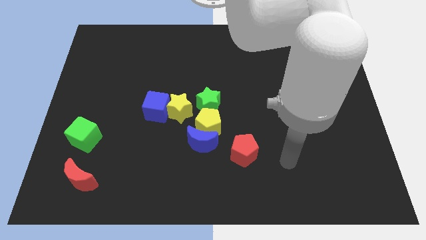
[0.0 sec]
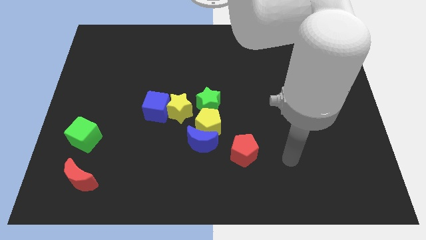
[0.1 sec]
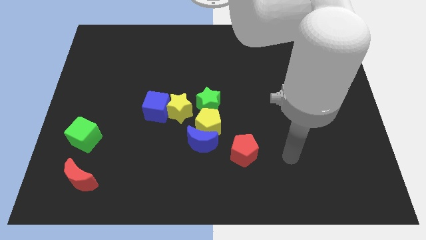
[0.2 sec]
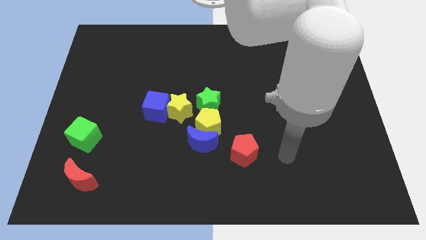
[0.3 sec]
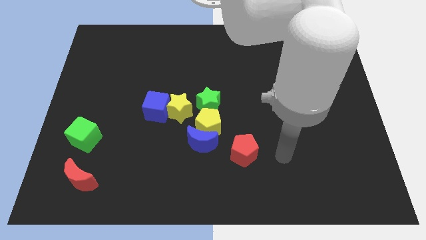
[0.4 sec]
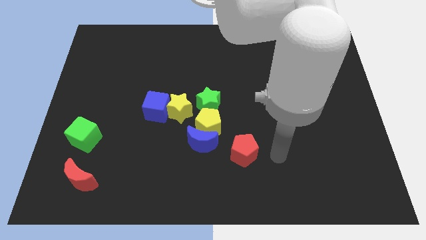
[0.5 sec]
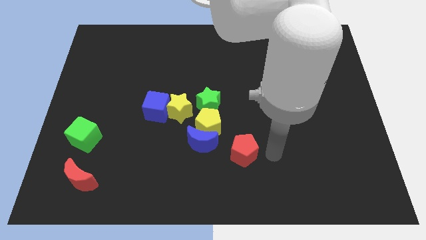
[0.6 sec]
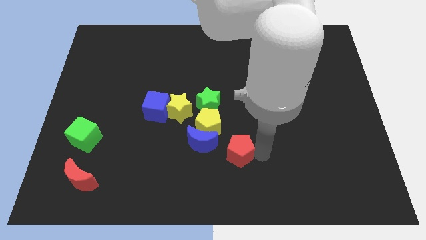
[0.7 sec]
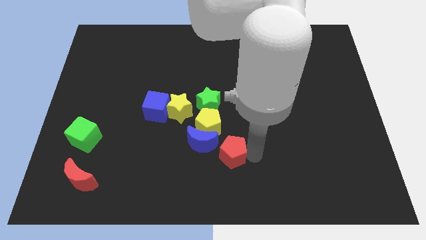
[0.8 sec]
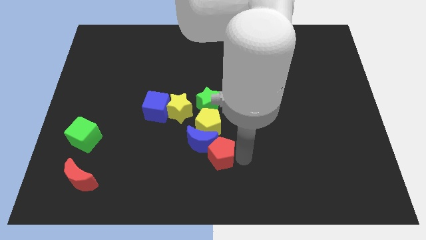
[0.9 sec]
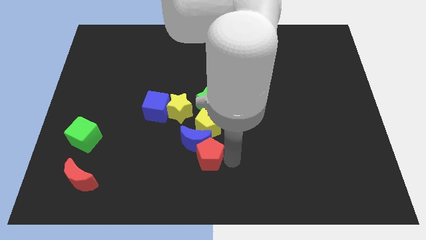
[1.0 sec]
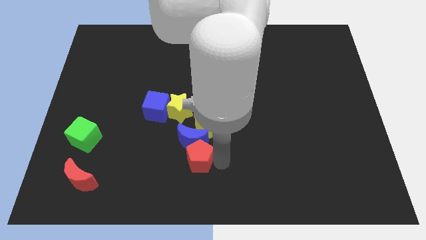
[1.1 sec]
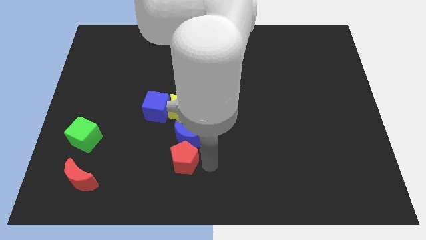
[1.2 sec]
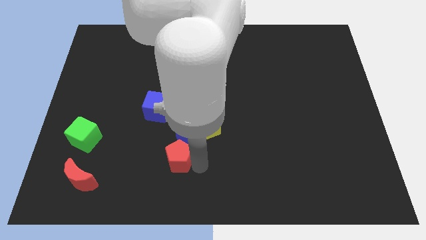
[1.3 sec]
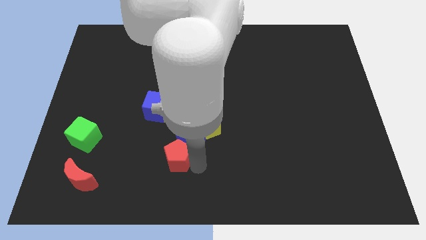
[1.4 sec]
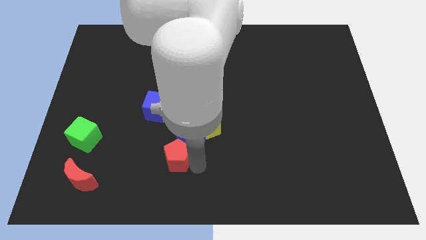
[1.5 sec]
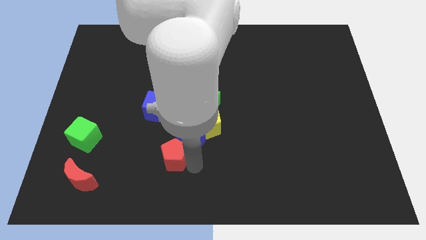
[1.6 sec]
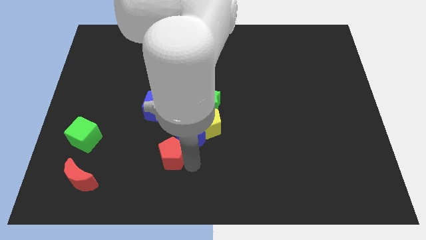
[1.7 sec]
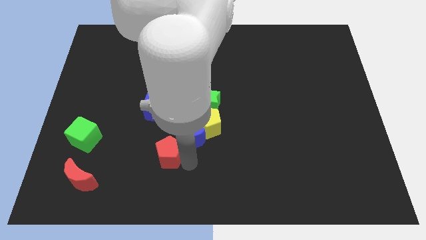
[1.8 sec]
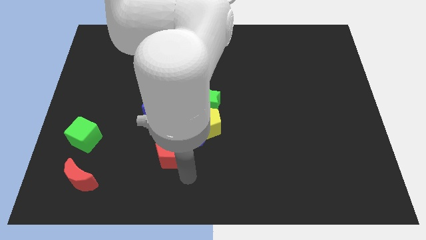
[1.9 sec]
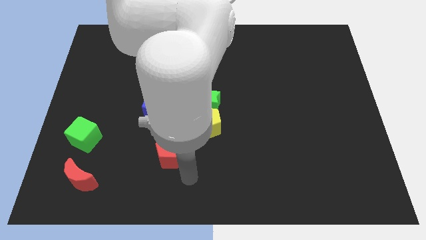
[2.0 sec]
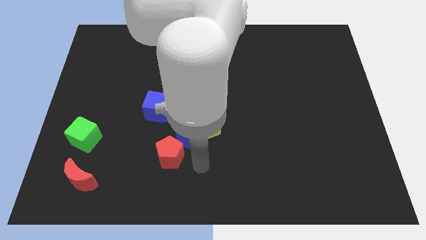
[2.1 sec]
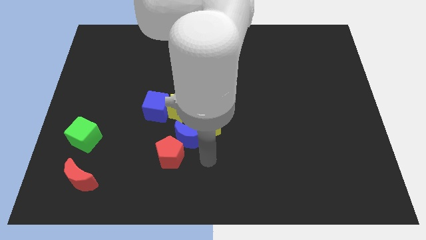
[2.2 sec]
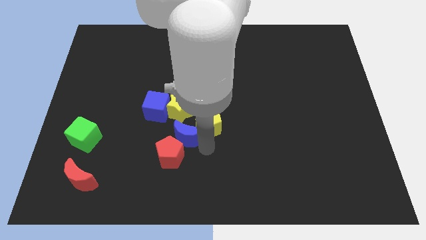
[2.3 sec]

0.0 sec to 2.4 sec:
push red pentagon into blue crescent

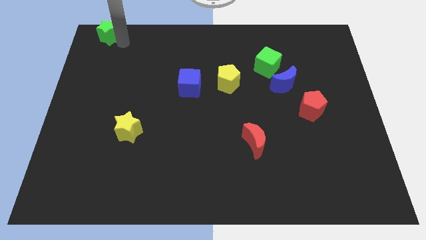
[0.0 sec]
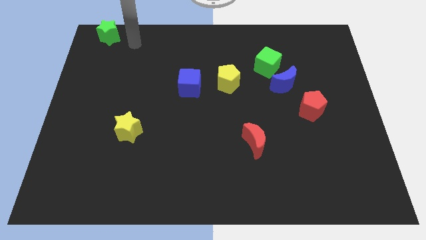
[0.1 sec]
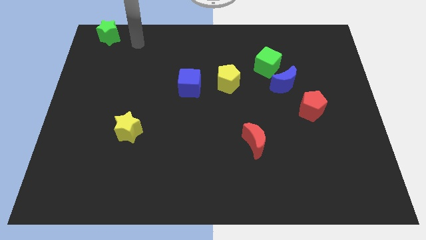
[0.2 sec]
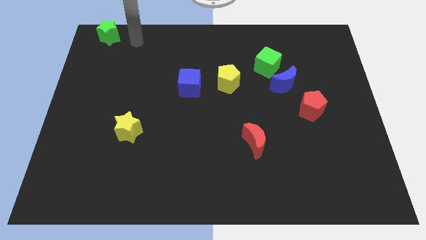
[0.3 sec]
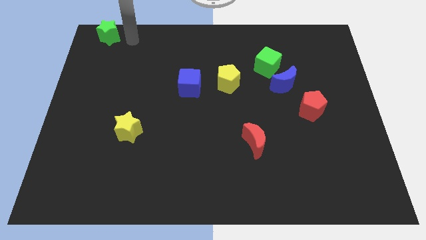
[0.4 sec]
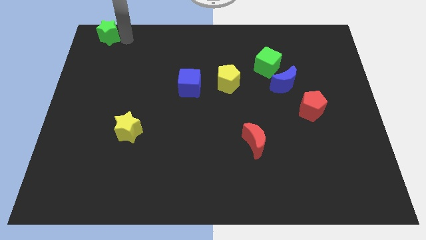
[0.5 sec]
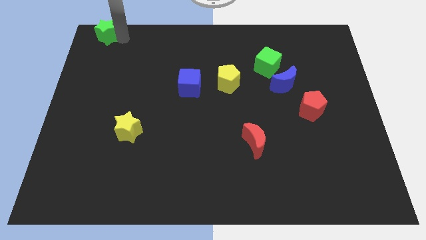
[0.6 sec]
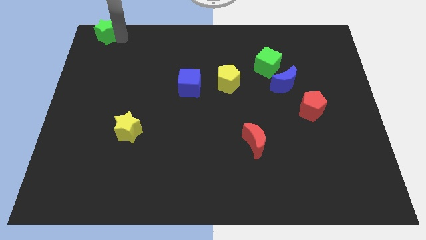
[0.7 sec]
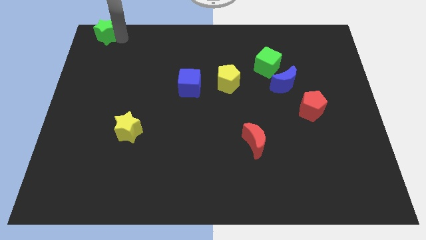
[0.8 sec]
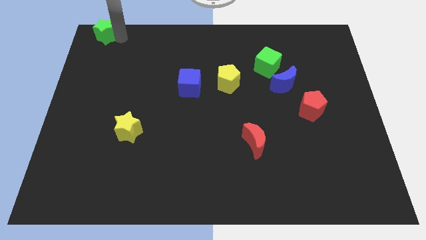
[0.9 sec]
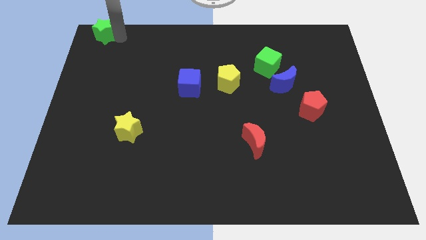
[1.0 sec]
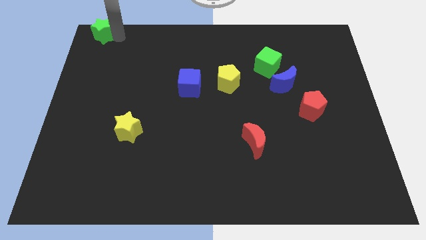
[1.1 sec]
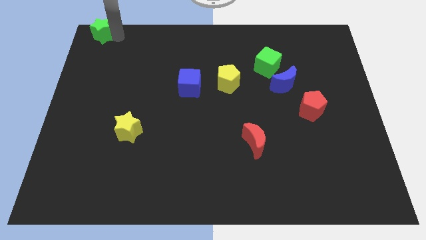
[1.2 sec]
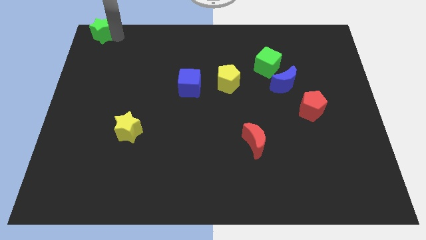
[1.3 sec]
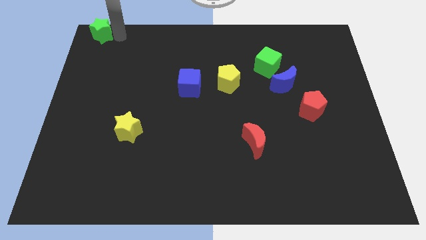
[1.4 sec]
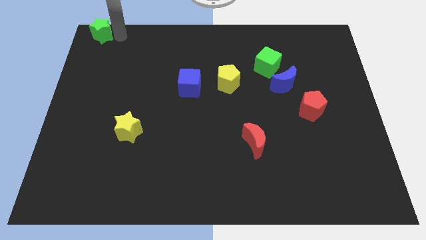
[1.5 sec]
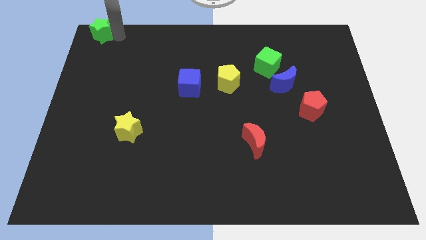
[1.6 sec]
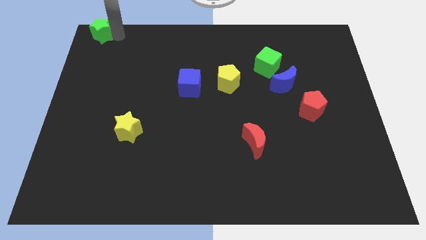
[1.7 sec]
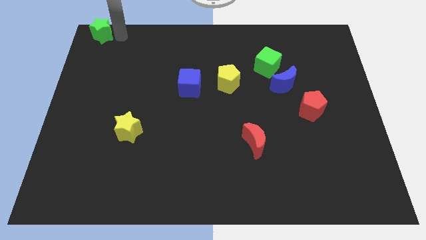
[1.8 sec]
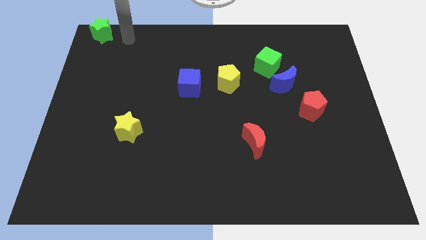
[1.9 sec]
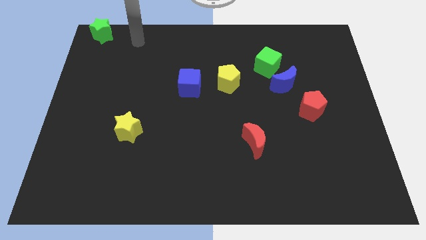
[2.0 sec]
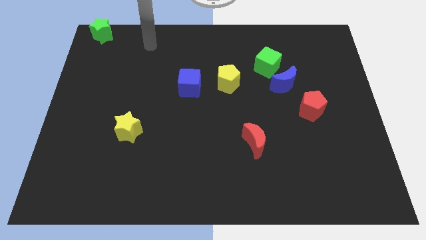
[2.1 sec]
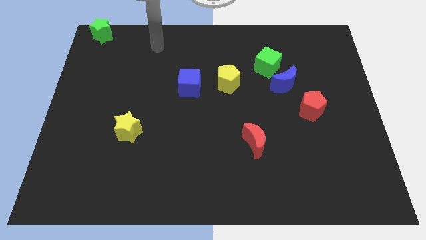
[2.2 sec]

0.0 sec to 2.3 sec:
push the green star to the top left corner of the board

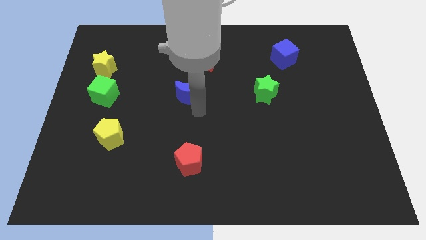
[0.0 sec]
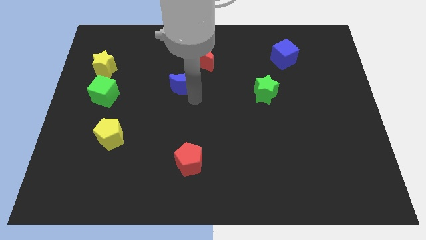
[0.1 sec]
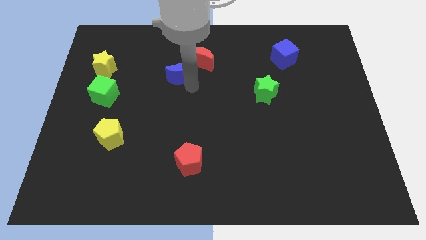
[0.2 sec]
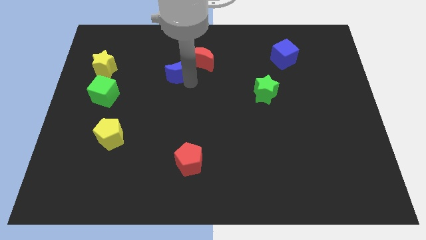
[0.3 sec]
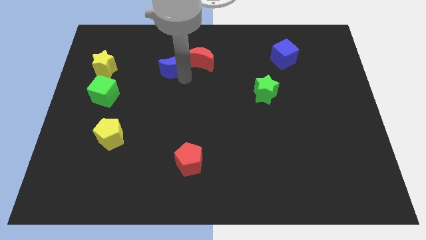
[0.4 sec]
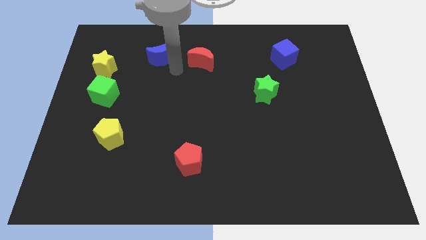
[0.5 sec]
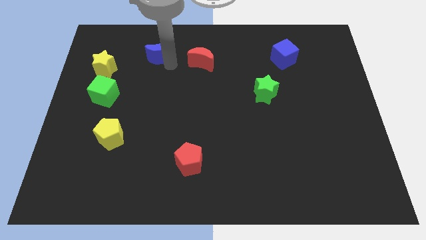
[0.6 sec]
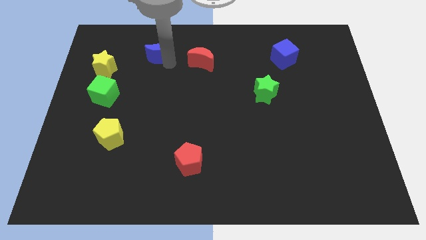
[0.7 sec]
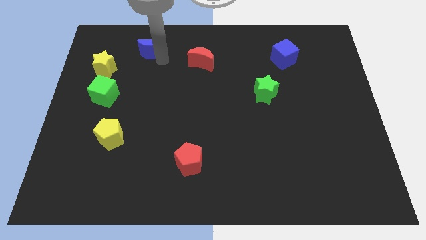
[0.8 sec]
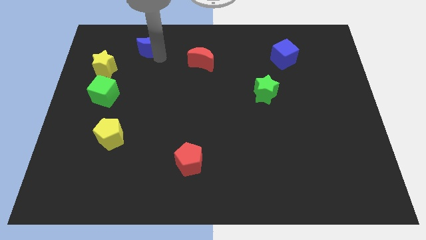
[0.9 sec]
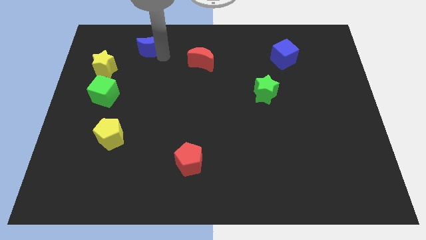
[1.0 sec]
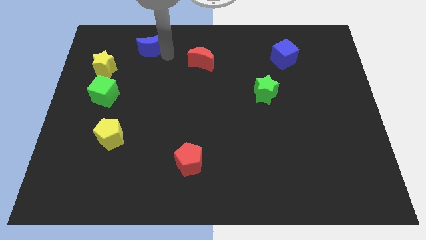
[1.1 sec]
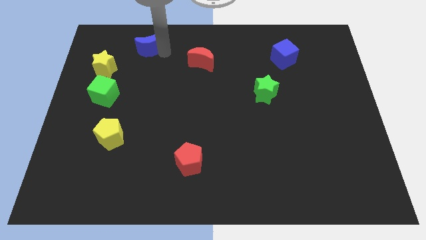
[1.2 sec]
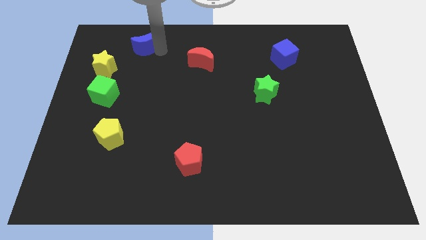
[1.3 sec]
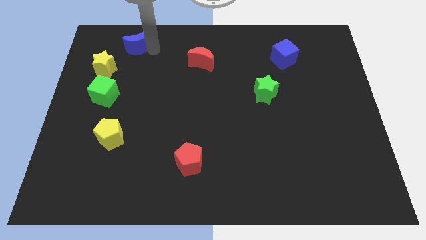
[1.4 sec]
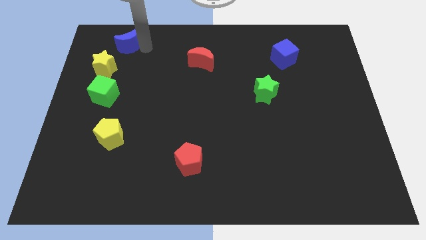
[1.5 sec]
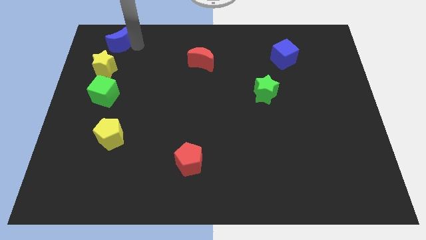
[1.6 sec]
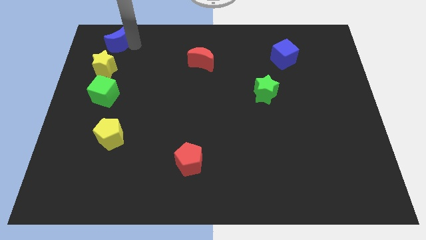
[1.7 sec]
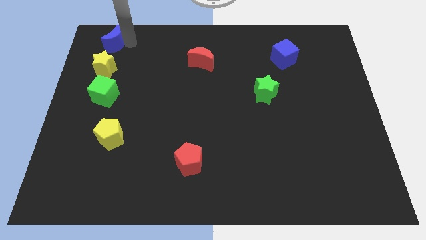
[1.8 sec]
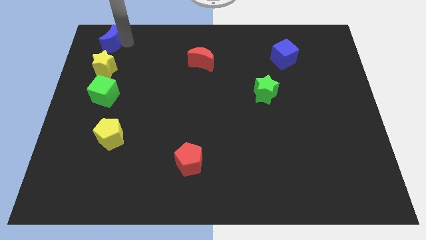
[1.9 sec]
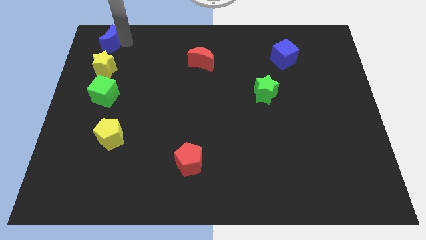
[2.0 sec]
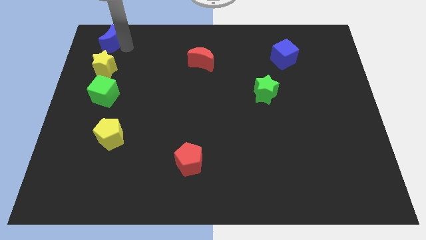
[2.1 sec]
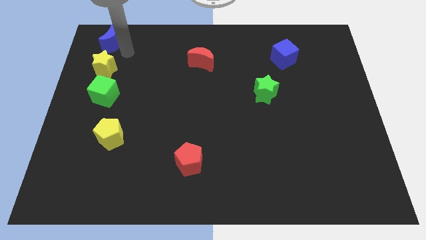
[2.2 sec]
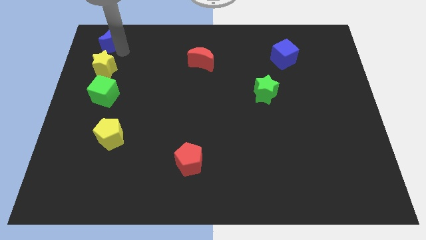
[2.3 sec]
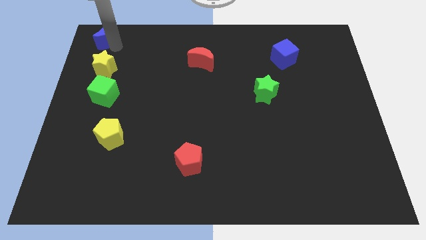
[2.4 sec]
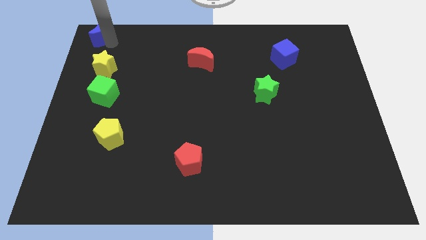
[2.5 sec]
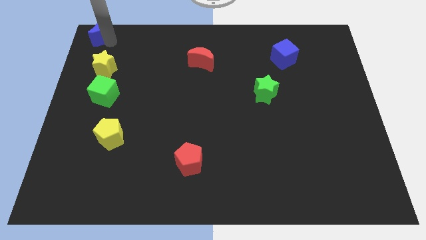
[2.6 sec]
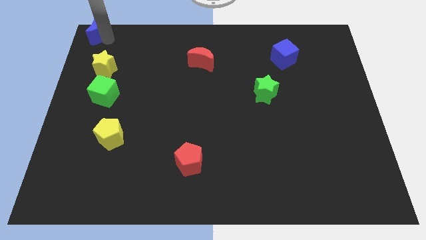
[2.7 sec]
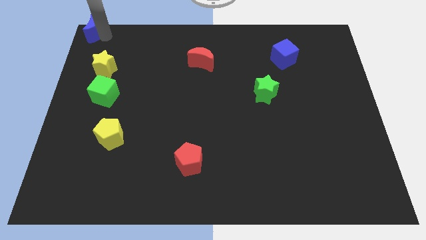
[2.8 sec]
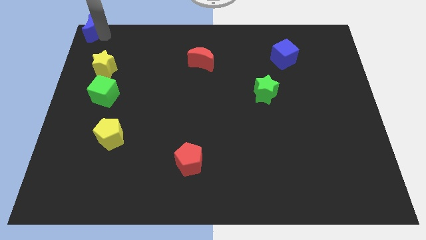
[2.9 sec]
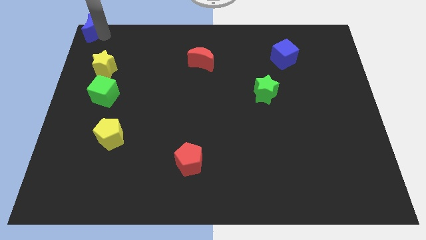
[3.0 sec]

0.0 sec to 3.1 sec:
place blue moon in the top left

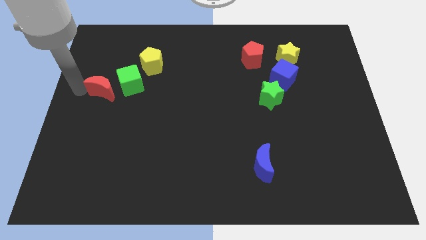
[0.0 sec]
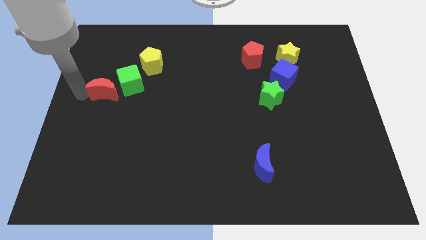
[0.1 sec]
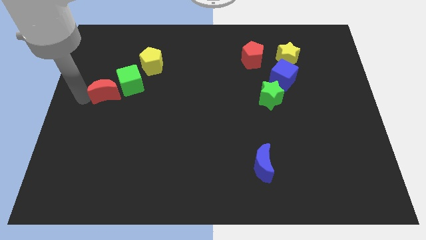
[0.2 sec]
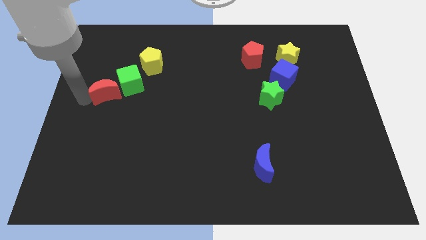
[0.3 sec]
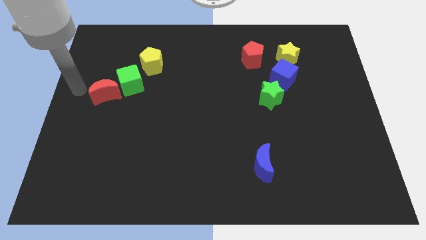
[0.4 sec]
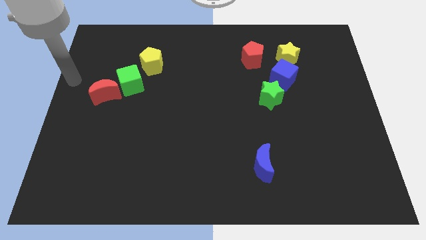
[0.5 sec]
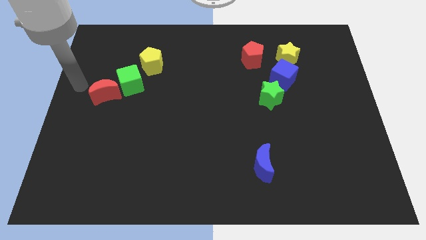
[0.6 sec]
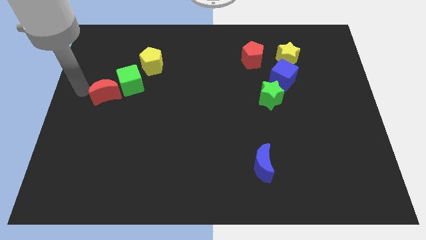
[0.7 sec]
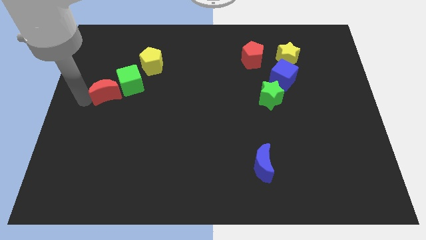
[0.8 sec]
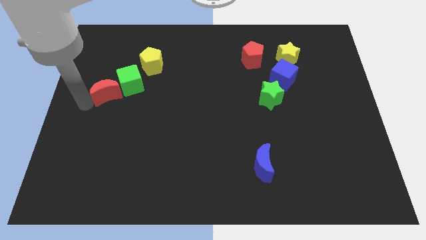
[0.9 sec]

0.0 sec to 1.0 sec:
place the red crescent towards the bottom left side of the green cube
